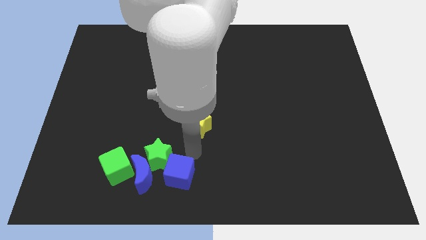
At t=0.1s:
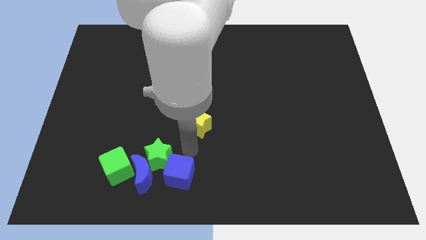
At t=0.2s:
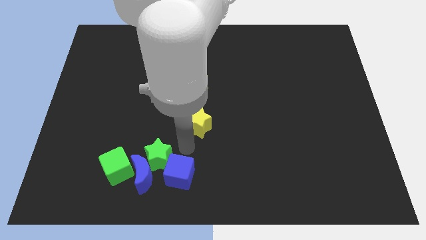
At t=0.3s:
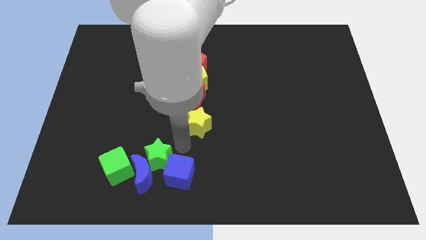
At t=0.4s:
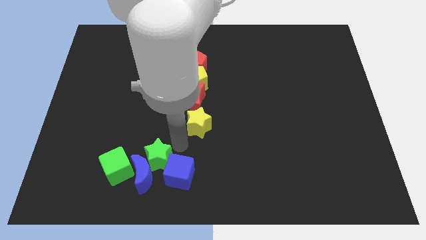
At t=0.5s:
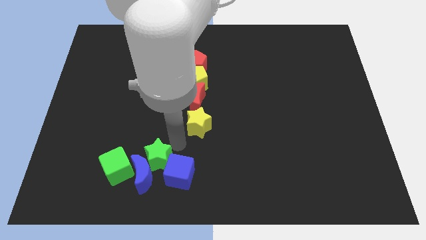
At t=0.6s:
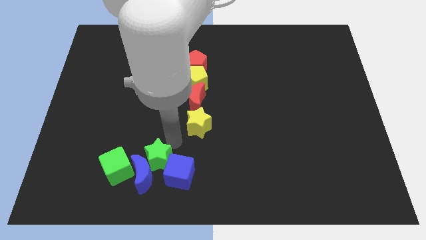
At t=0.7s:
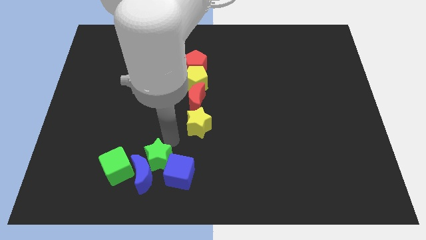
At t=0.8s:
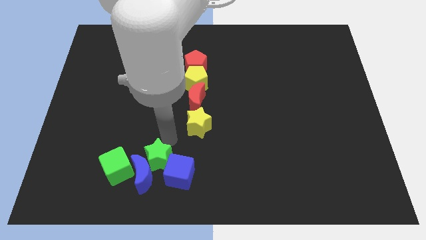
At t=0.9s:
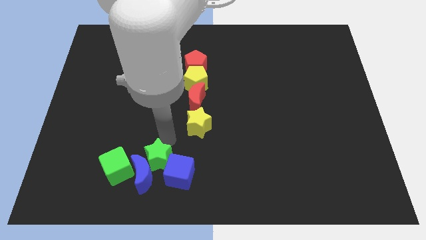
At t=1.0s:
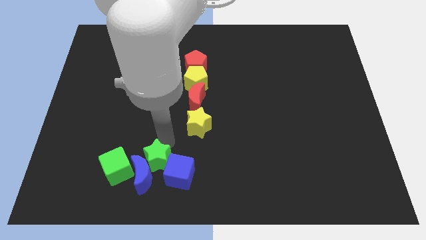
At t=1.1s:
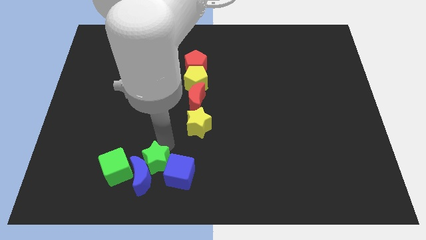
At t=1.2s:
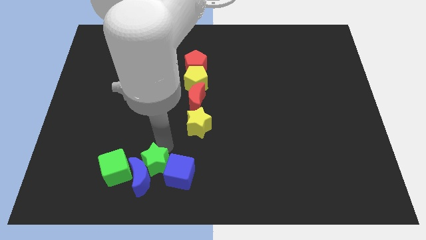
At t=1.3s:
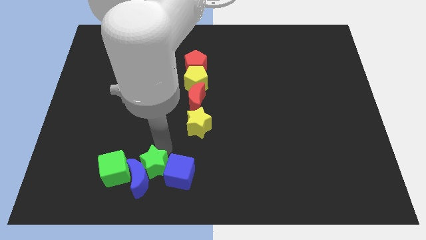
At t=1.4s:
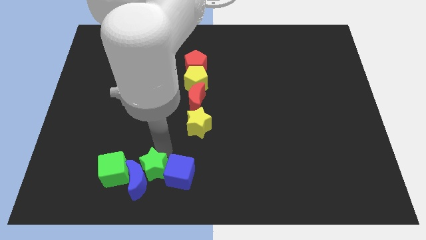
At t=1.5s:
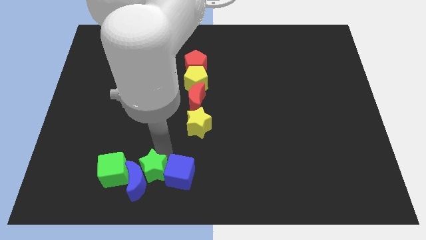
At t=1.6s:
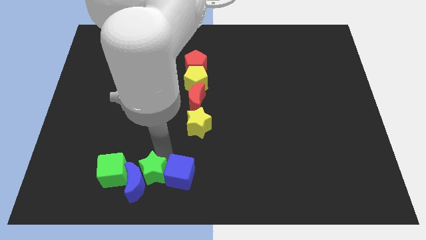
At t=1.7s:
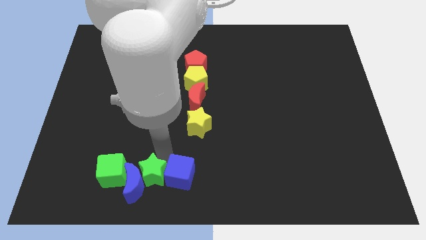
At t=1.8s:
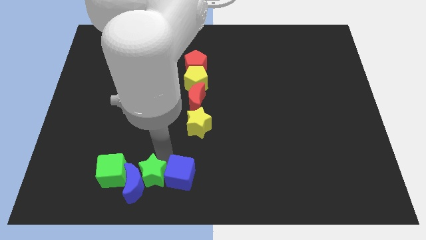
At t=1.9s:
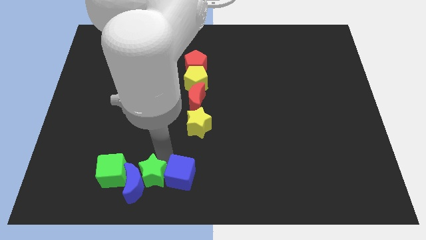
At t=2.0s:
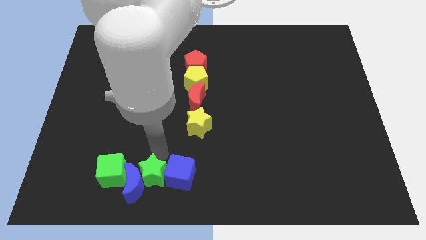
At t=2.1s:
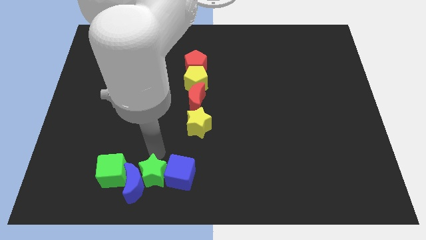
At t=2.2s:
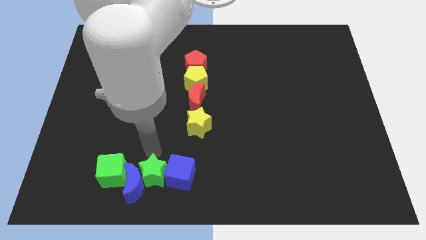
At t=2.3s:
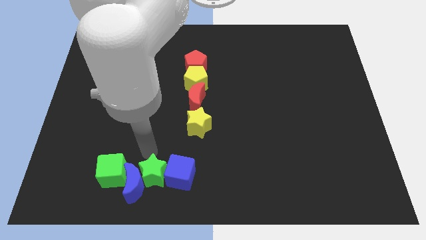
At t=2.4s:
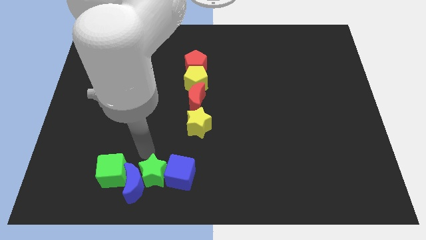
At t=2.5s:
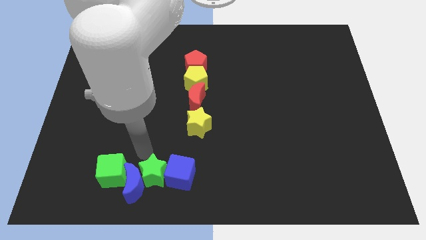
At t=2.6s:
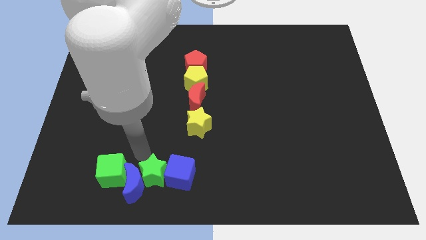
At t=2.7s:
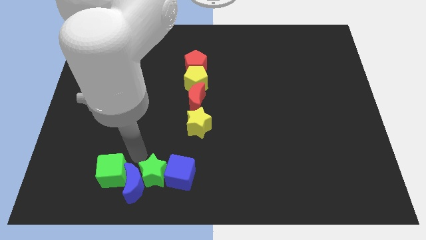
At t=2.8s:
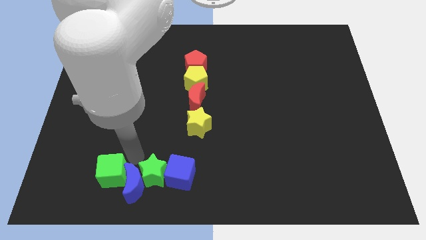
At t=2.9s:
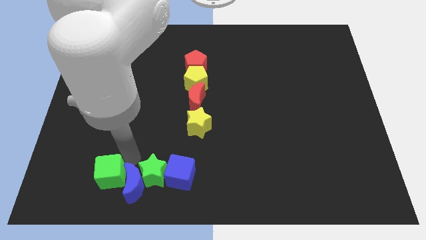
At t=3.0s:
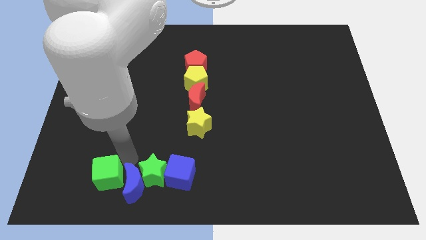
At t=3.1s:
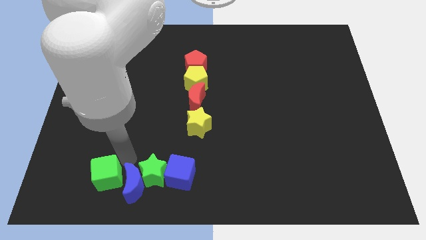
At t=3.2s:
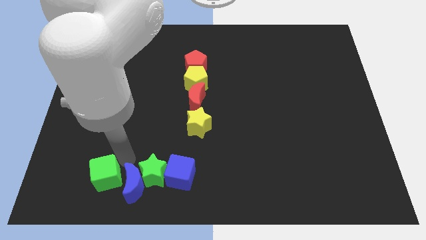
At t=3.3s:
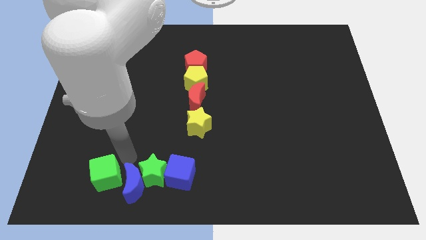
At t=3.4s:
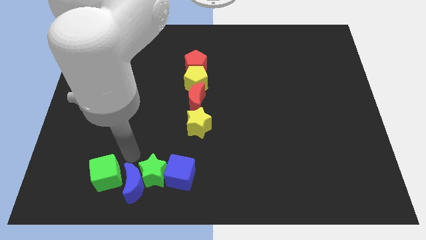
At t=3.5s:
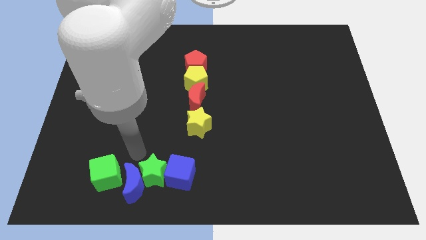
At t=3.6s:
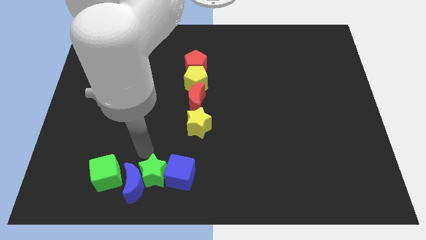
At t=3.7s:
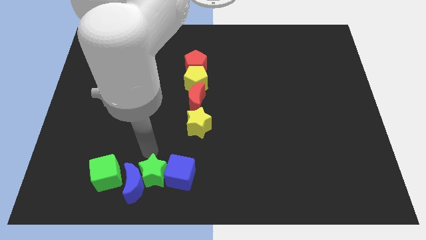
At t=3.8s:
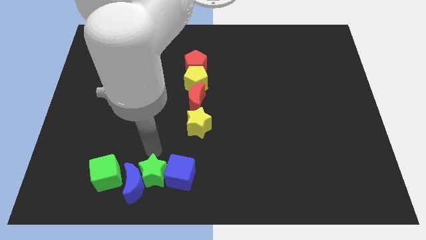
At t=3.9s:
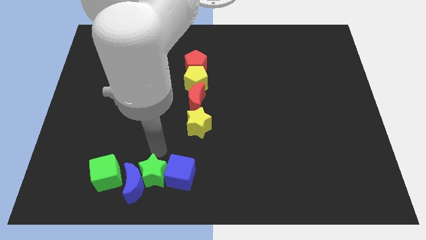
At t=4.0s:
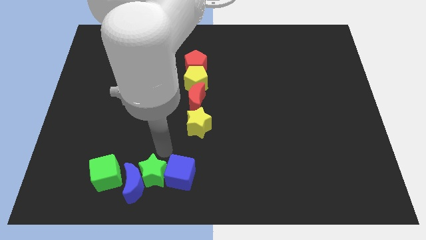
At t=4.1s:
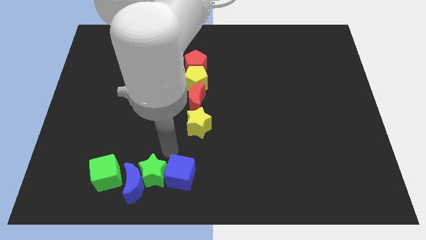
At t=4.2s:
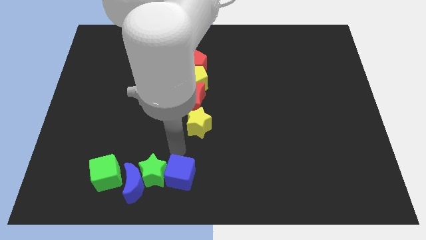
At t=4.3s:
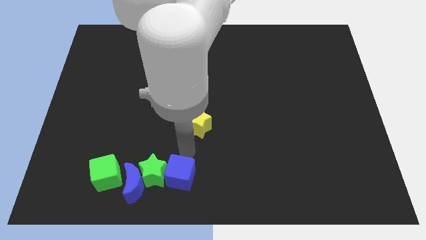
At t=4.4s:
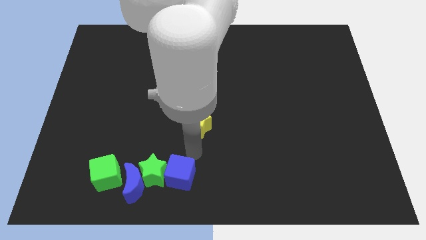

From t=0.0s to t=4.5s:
move the green star slightly to form a row

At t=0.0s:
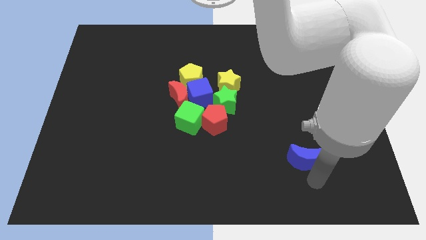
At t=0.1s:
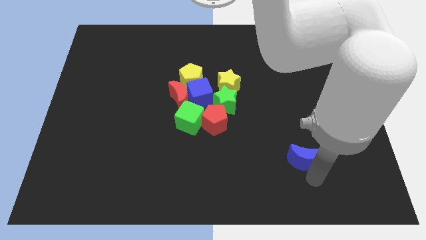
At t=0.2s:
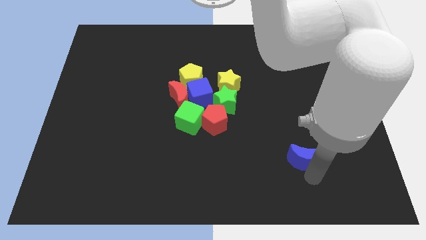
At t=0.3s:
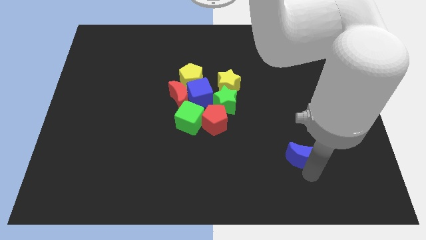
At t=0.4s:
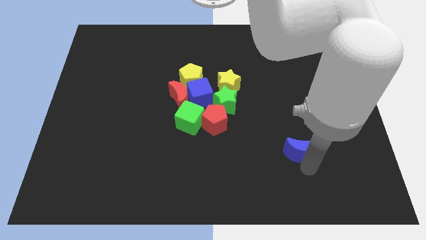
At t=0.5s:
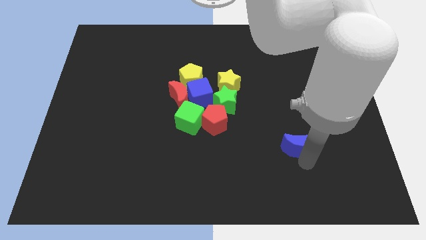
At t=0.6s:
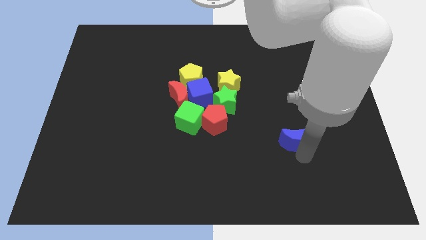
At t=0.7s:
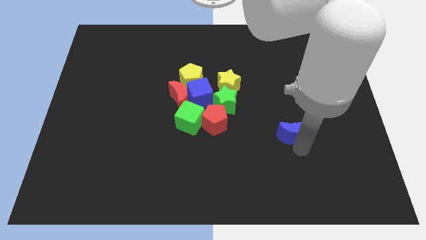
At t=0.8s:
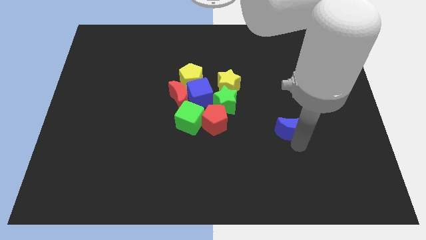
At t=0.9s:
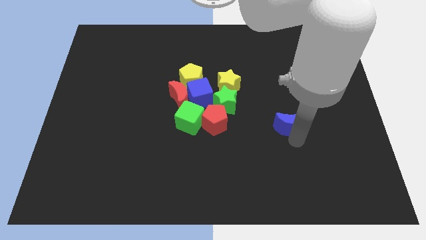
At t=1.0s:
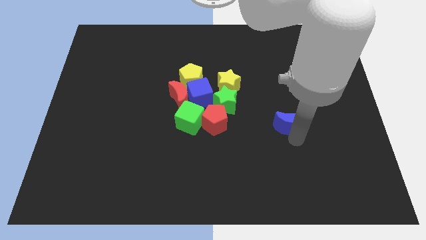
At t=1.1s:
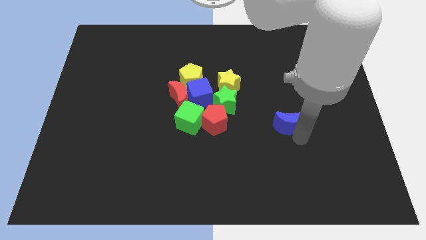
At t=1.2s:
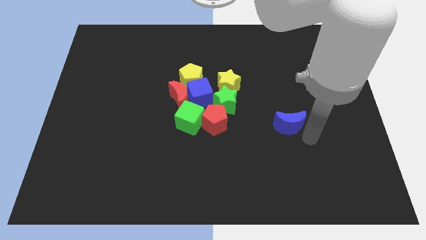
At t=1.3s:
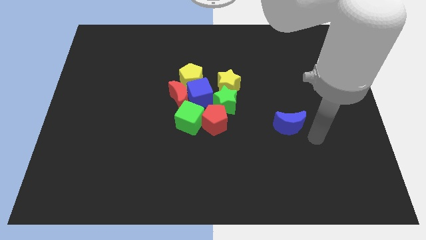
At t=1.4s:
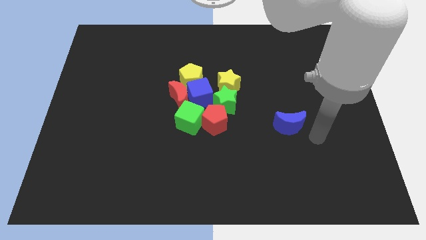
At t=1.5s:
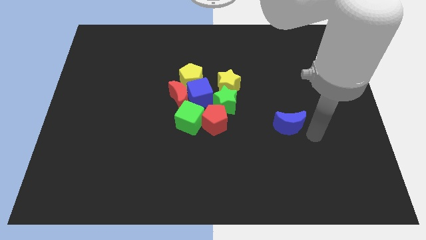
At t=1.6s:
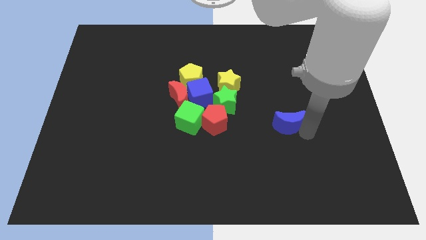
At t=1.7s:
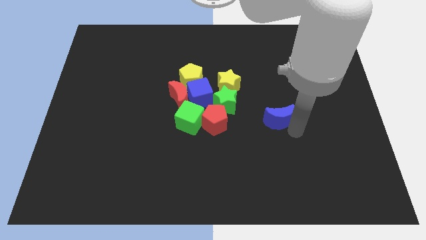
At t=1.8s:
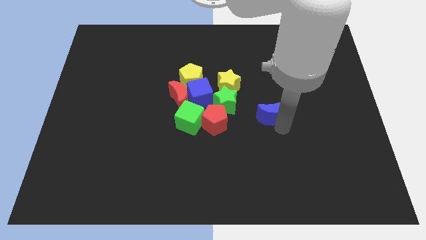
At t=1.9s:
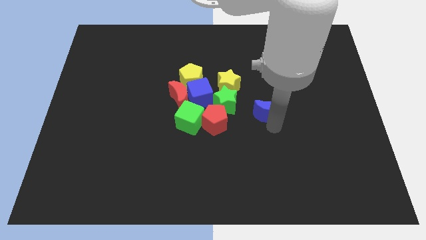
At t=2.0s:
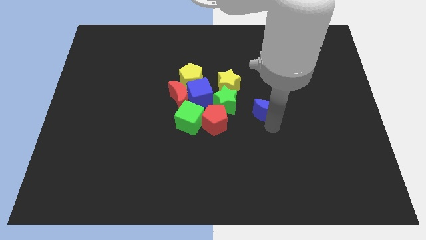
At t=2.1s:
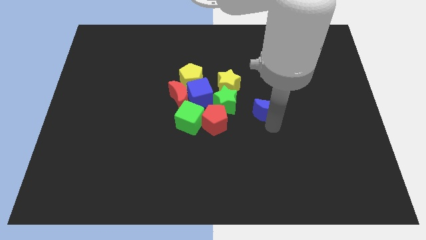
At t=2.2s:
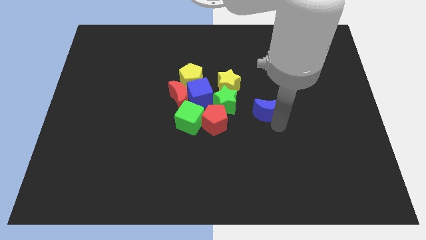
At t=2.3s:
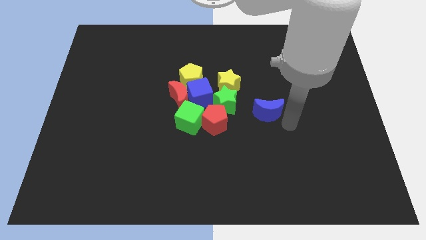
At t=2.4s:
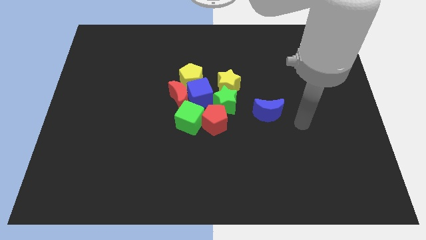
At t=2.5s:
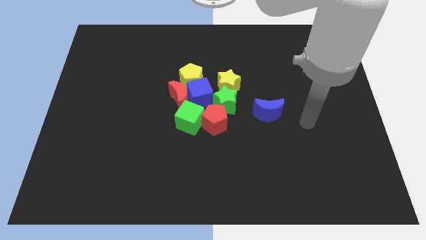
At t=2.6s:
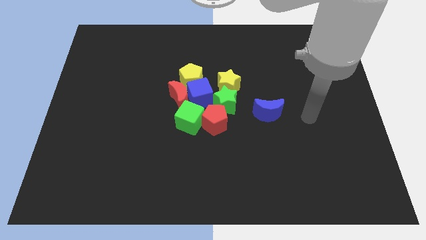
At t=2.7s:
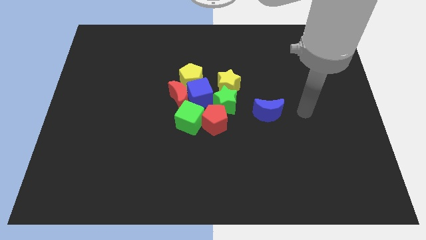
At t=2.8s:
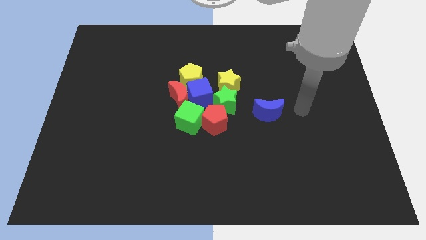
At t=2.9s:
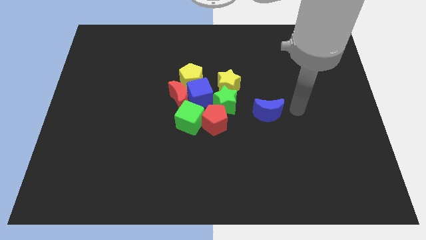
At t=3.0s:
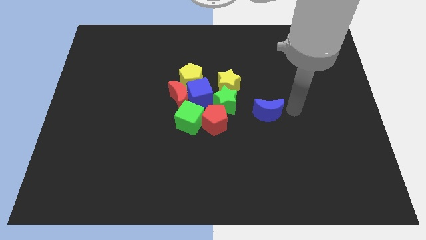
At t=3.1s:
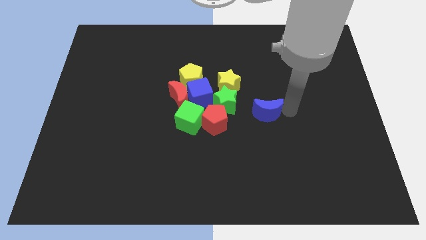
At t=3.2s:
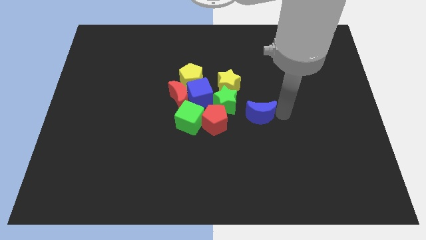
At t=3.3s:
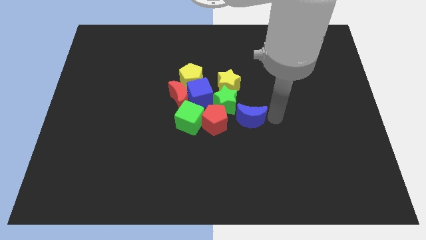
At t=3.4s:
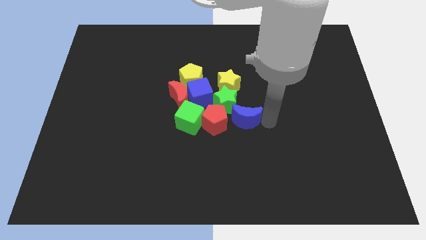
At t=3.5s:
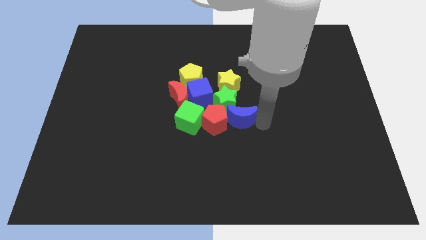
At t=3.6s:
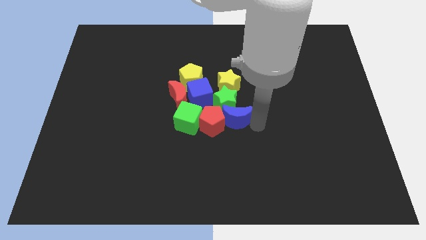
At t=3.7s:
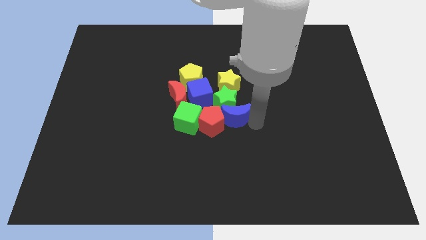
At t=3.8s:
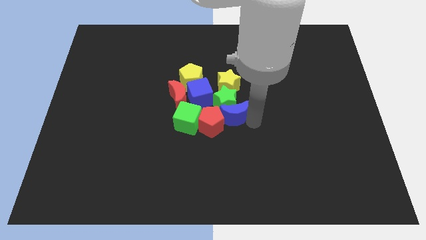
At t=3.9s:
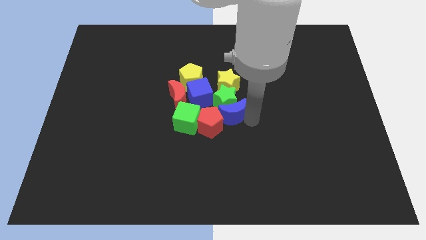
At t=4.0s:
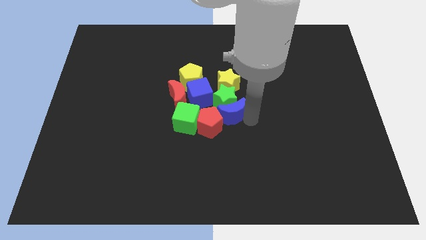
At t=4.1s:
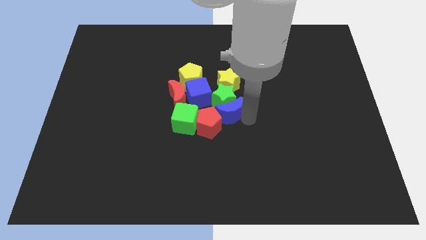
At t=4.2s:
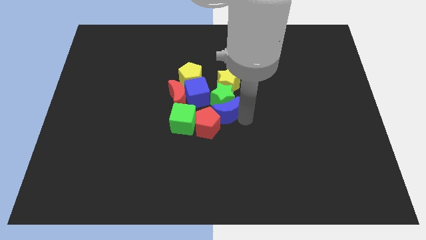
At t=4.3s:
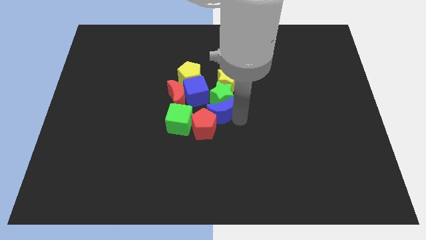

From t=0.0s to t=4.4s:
push the blue crescent to the group of blocks
